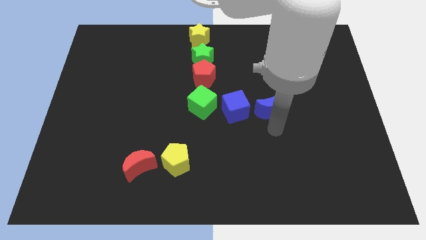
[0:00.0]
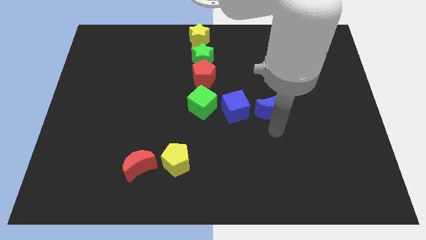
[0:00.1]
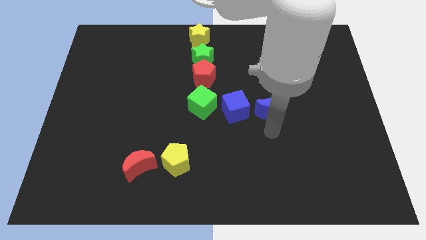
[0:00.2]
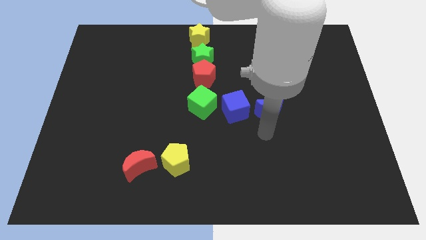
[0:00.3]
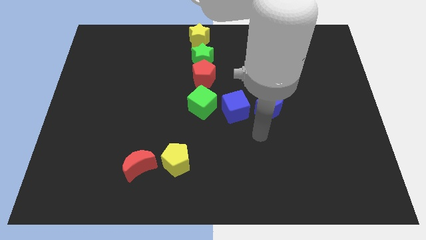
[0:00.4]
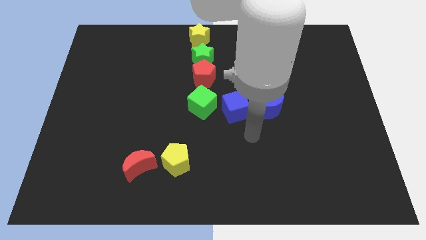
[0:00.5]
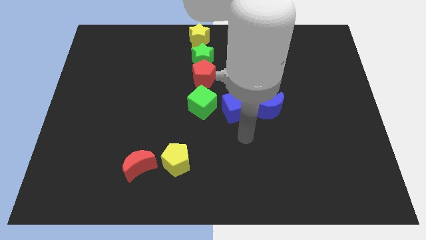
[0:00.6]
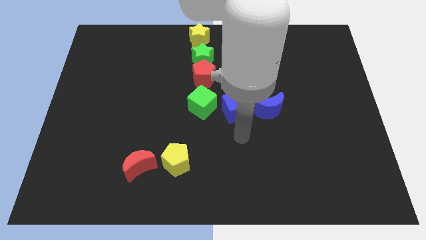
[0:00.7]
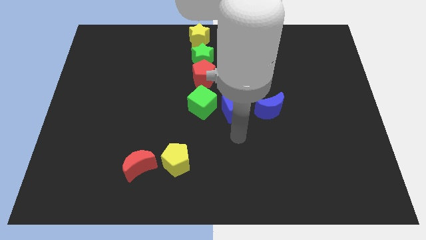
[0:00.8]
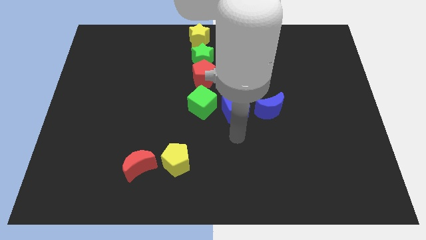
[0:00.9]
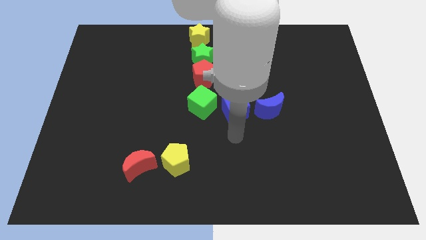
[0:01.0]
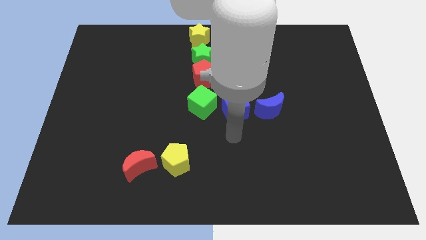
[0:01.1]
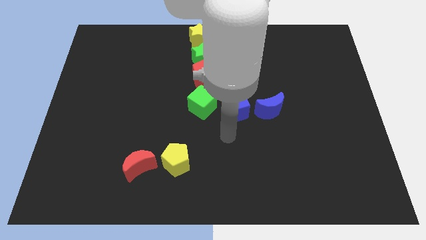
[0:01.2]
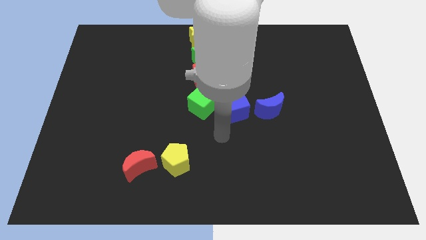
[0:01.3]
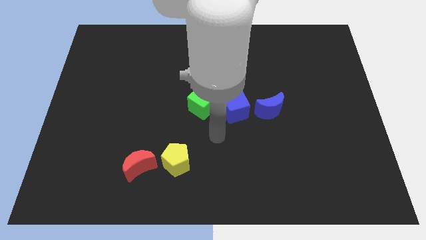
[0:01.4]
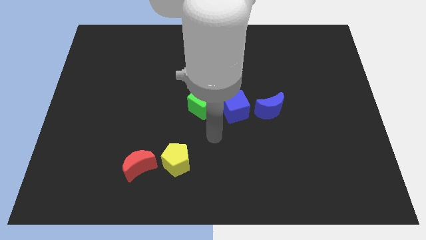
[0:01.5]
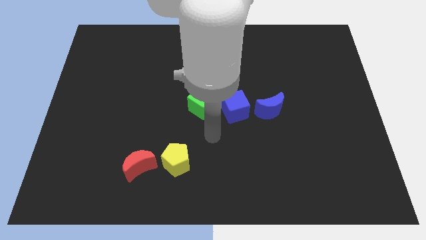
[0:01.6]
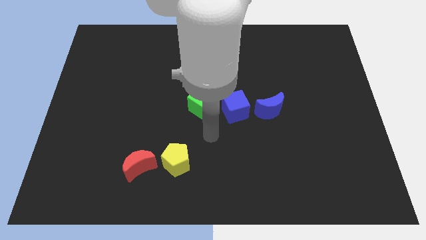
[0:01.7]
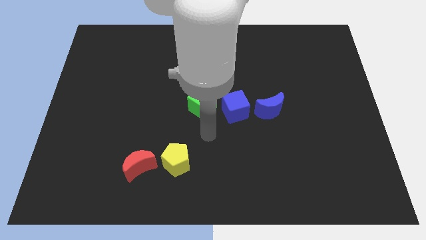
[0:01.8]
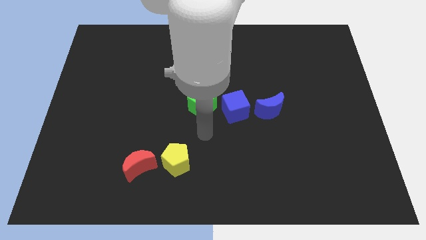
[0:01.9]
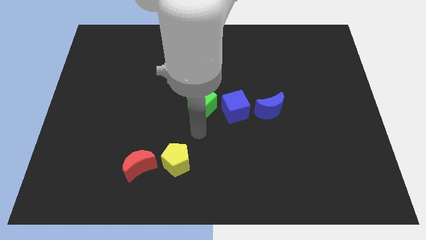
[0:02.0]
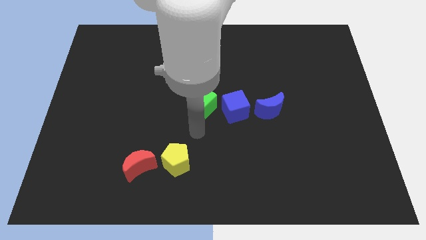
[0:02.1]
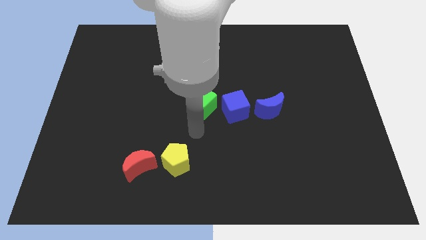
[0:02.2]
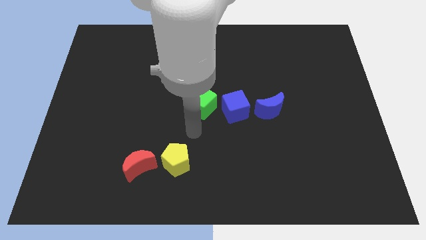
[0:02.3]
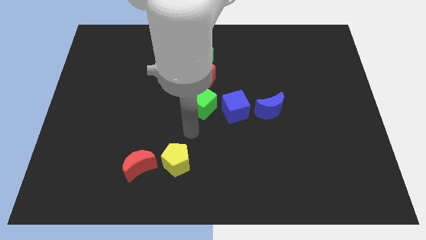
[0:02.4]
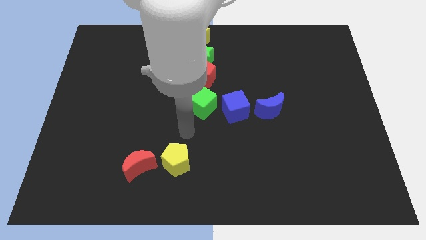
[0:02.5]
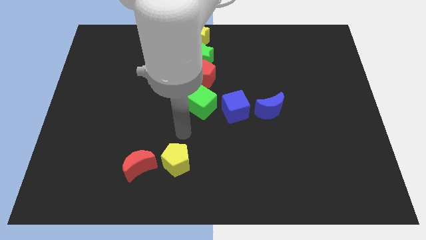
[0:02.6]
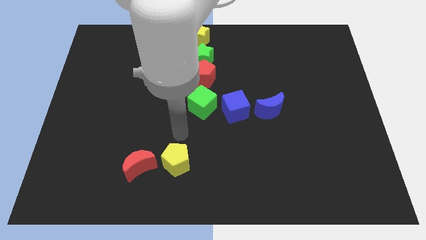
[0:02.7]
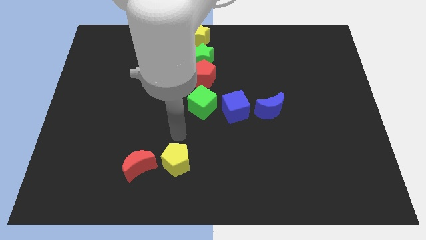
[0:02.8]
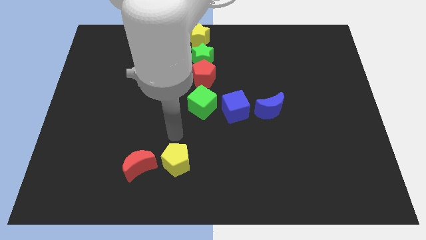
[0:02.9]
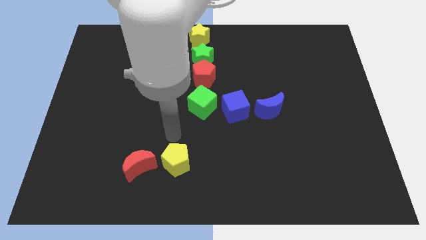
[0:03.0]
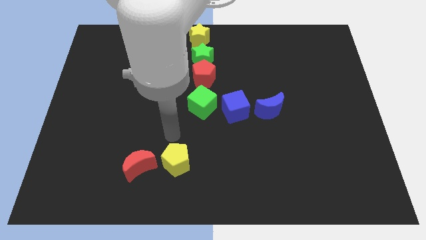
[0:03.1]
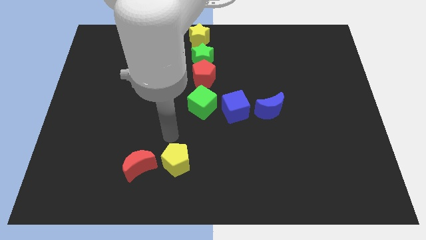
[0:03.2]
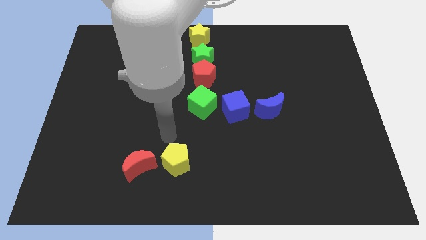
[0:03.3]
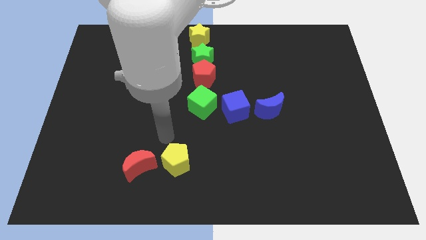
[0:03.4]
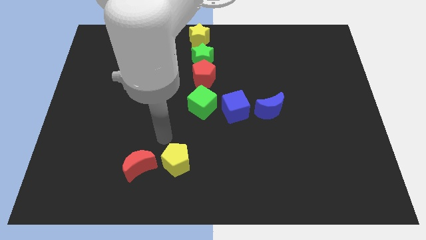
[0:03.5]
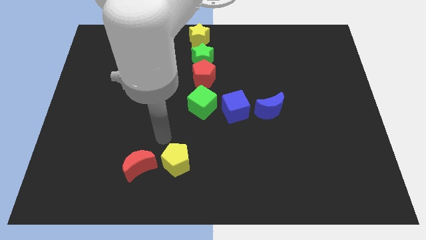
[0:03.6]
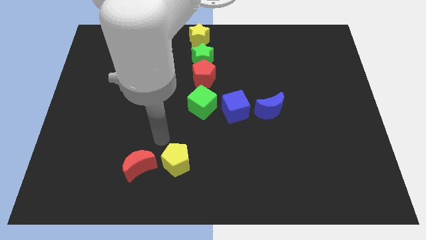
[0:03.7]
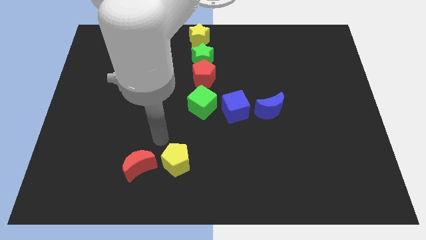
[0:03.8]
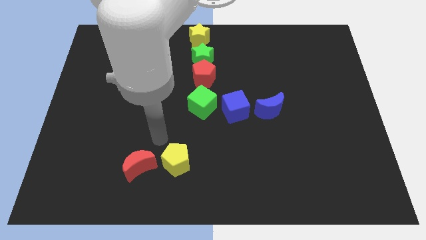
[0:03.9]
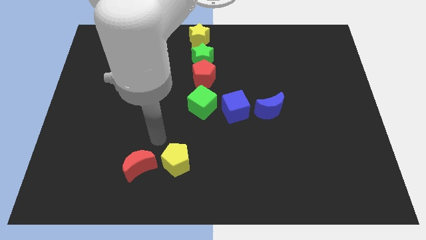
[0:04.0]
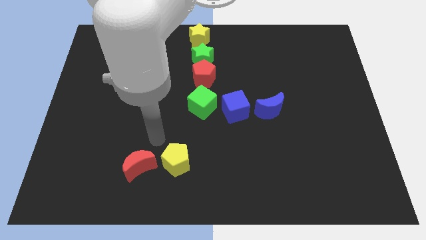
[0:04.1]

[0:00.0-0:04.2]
move your arm away from the blue moon

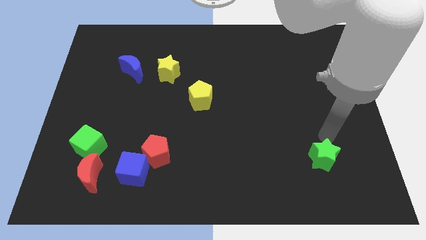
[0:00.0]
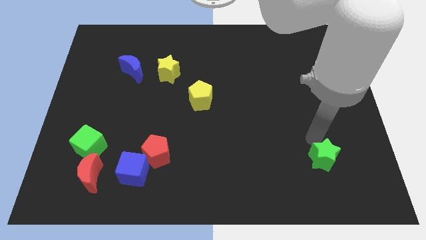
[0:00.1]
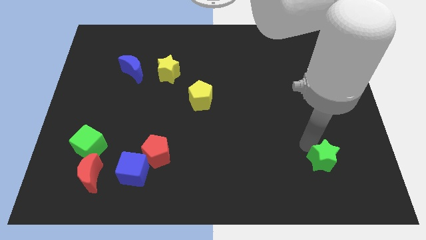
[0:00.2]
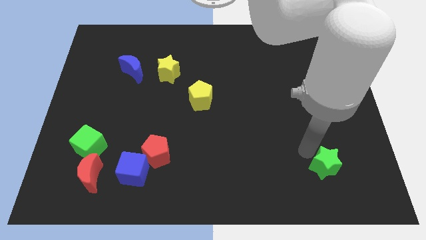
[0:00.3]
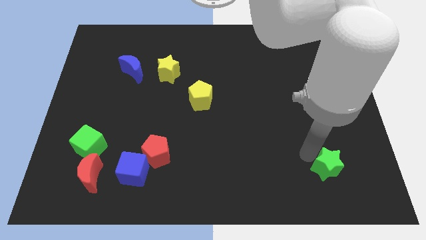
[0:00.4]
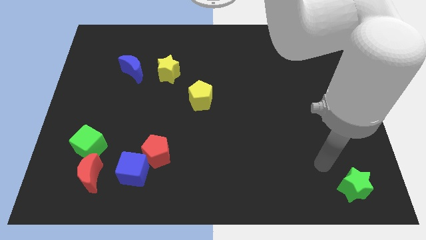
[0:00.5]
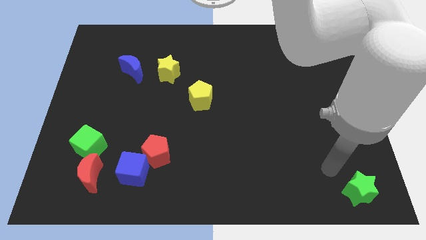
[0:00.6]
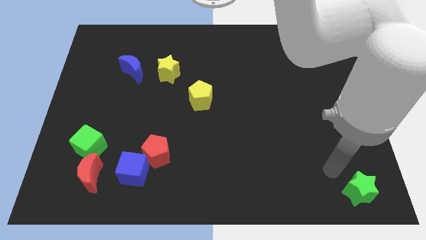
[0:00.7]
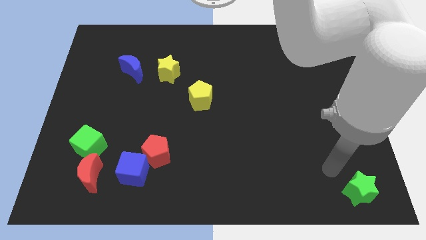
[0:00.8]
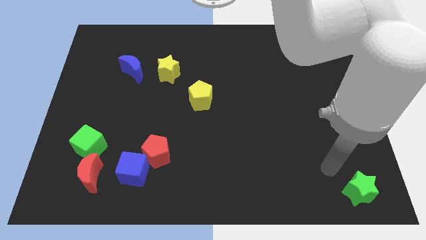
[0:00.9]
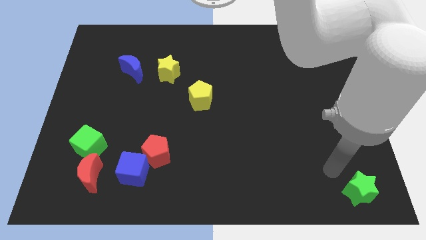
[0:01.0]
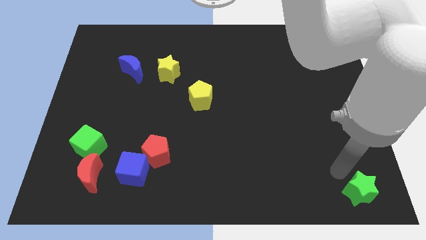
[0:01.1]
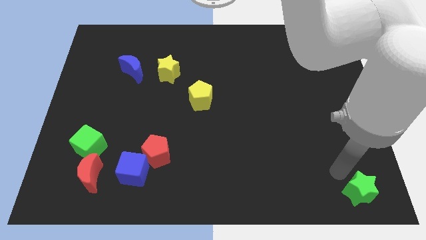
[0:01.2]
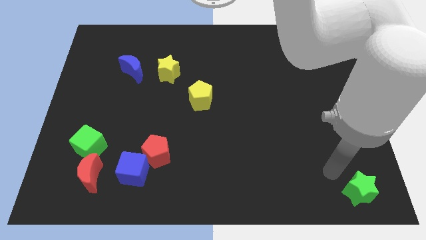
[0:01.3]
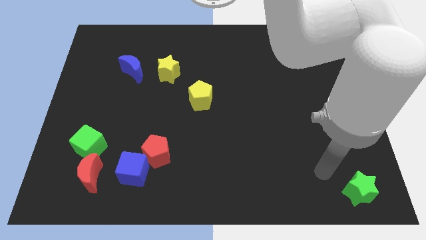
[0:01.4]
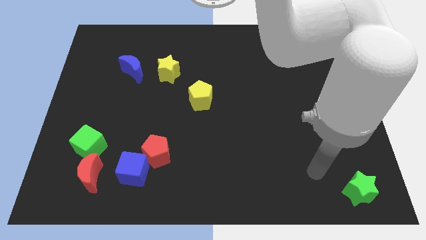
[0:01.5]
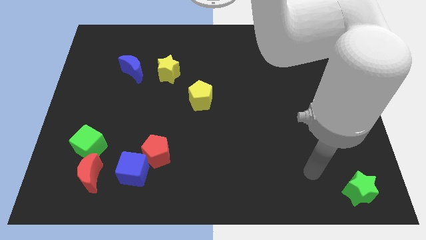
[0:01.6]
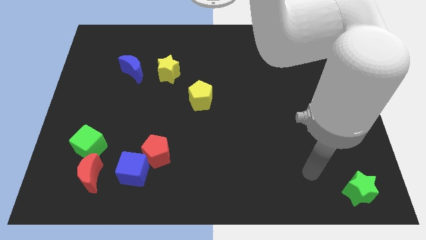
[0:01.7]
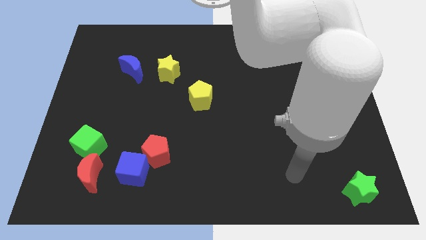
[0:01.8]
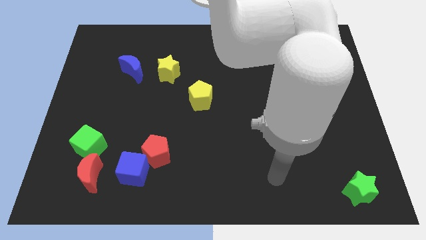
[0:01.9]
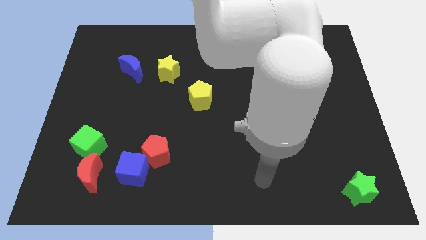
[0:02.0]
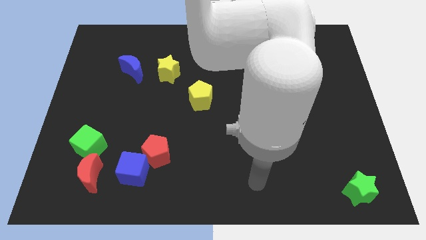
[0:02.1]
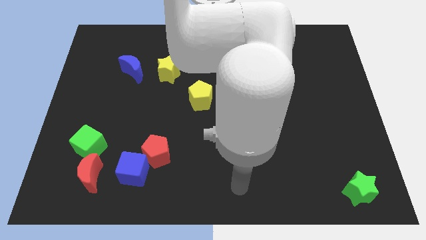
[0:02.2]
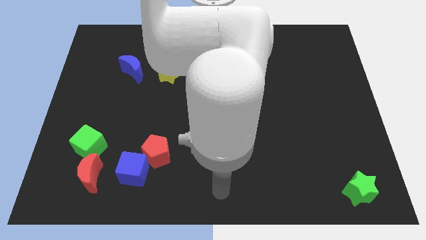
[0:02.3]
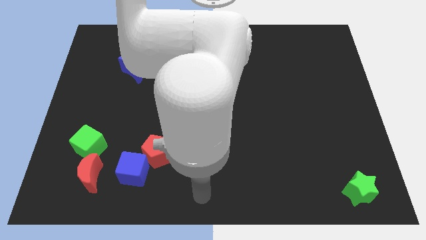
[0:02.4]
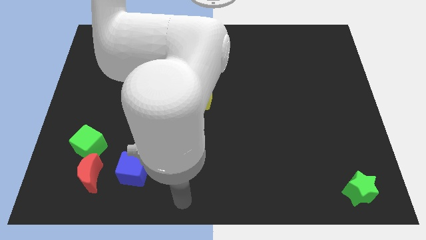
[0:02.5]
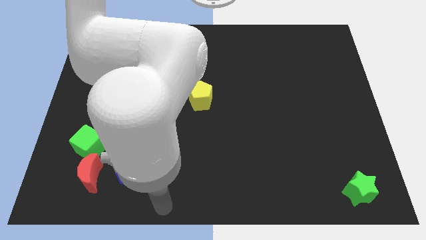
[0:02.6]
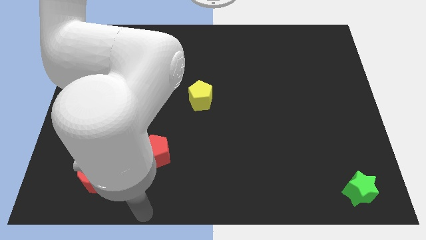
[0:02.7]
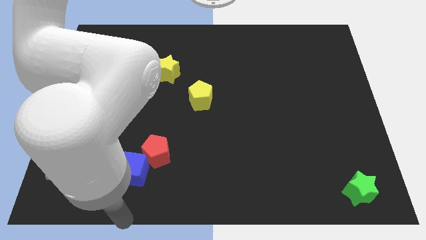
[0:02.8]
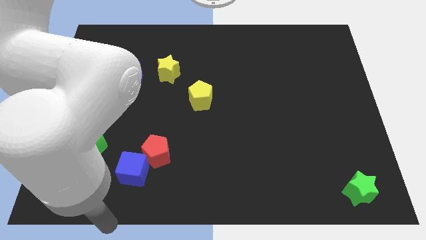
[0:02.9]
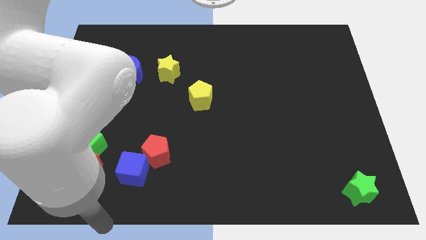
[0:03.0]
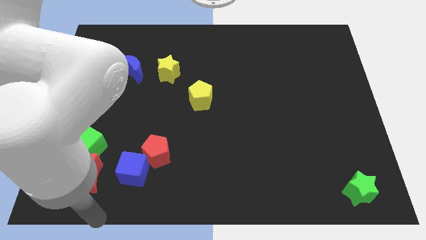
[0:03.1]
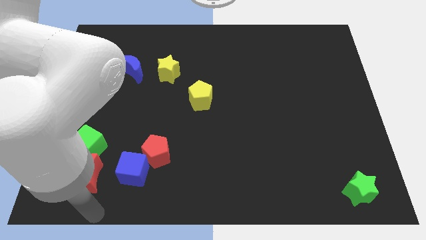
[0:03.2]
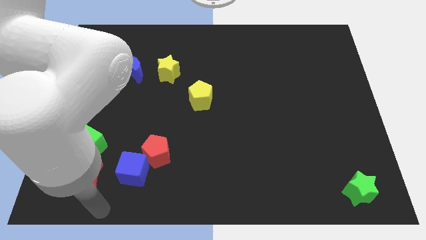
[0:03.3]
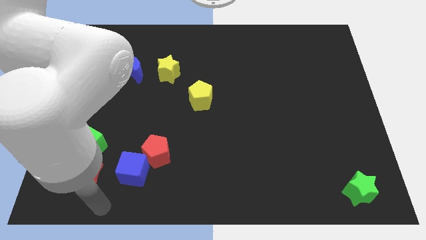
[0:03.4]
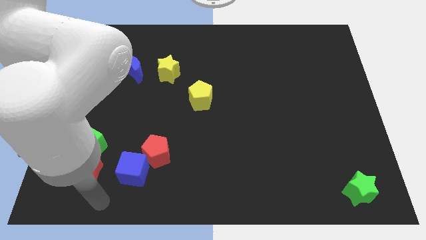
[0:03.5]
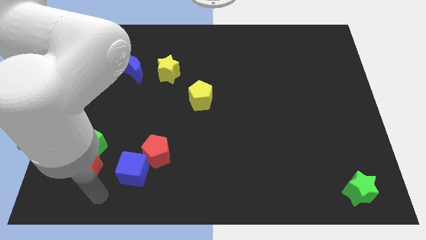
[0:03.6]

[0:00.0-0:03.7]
move your arm towards the red crescent

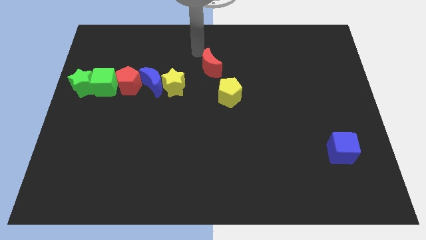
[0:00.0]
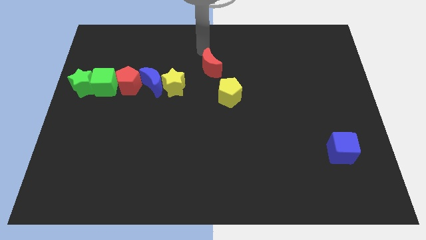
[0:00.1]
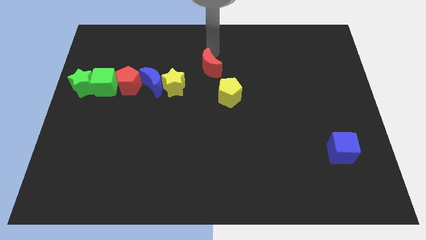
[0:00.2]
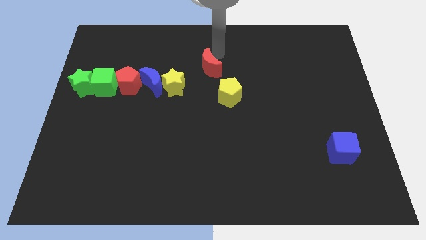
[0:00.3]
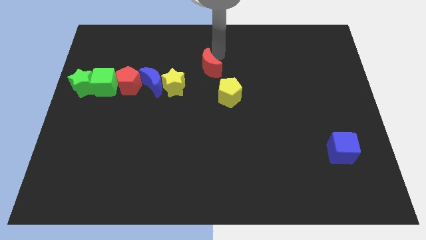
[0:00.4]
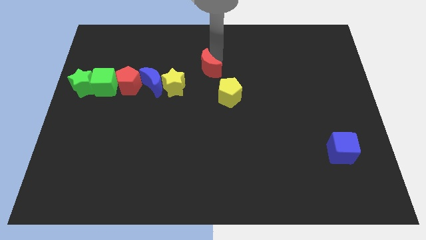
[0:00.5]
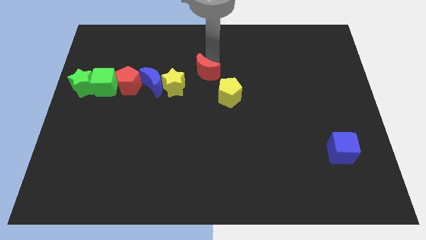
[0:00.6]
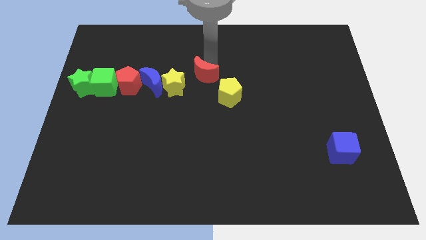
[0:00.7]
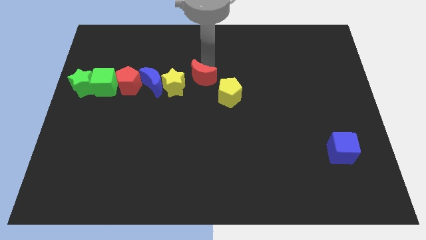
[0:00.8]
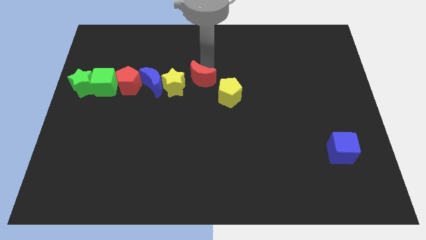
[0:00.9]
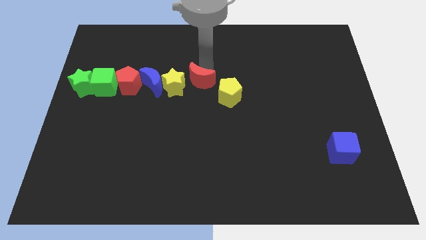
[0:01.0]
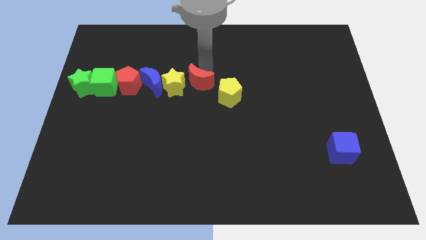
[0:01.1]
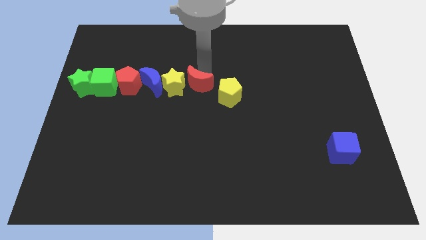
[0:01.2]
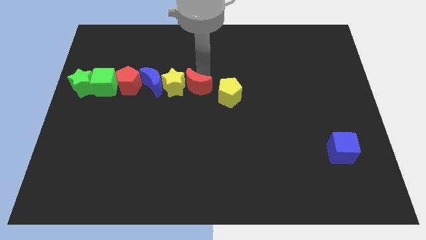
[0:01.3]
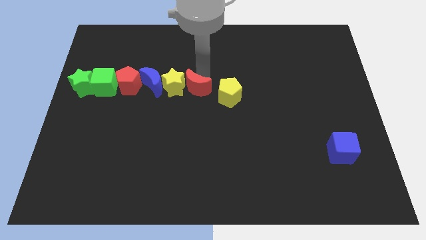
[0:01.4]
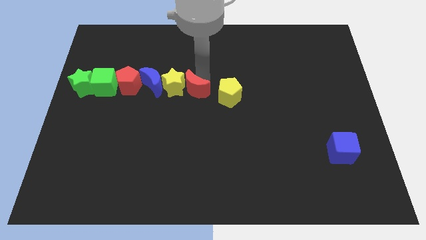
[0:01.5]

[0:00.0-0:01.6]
move the red crescent close to the right of the yellow star
